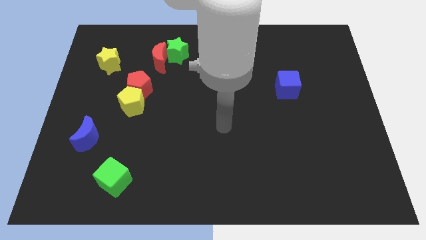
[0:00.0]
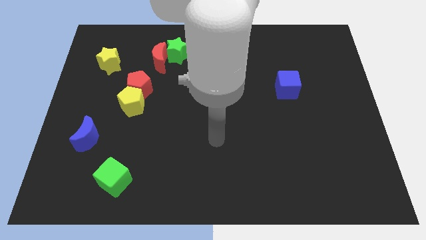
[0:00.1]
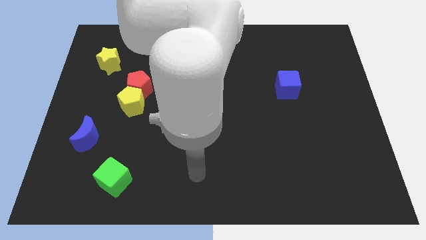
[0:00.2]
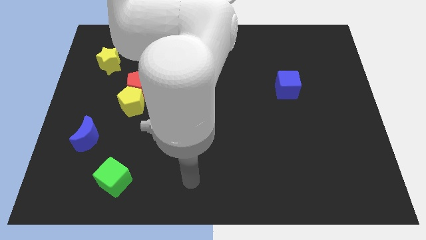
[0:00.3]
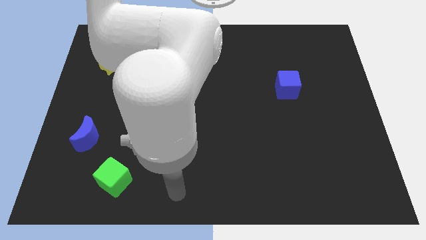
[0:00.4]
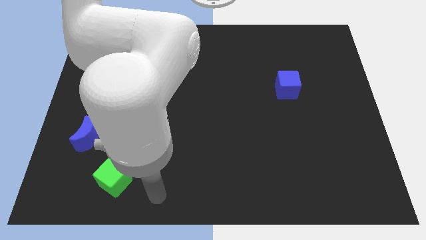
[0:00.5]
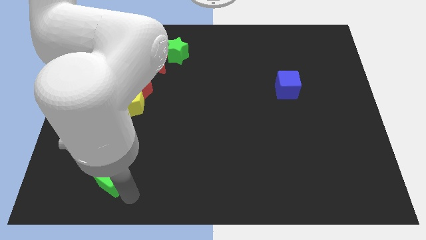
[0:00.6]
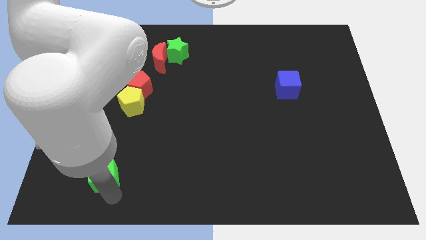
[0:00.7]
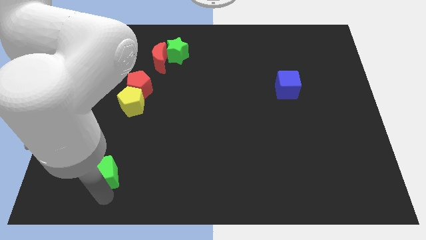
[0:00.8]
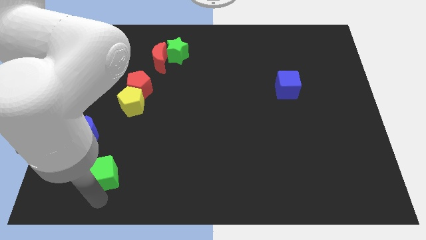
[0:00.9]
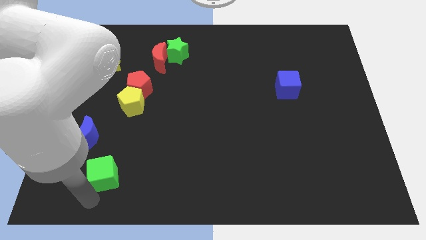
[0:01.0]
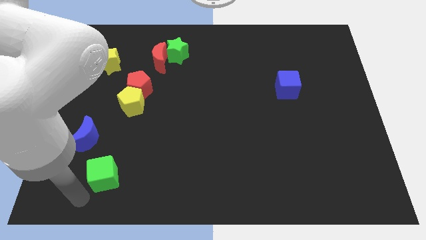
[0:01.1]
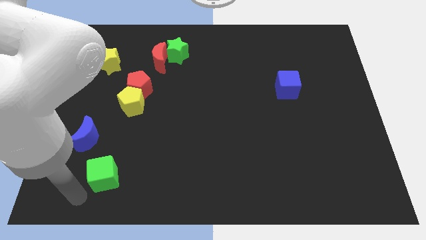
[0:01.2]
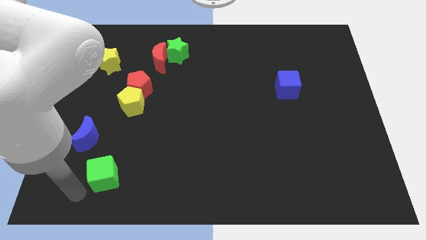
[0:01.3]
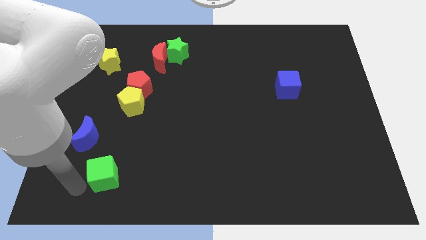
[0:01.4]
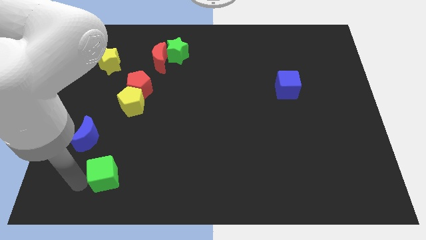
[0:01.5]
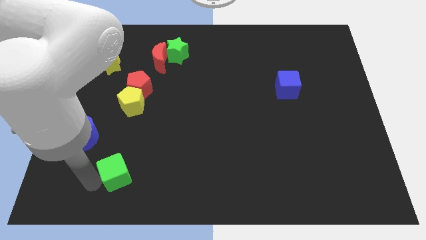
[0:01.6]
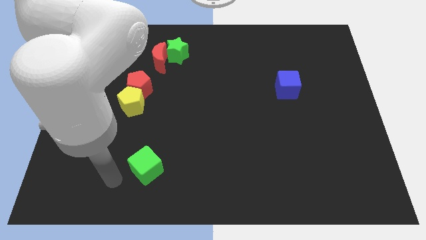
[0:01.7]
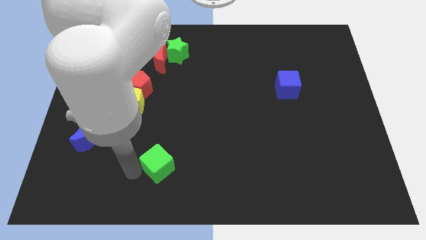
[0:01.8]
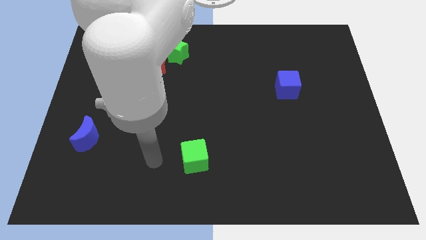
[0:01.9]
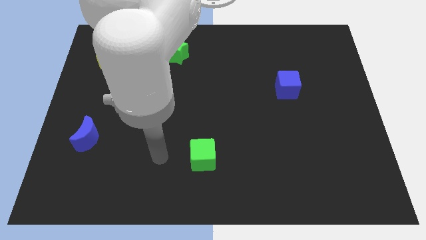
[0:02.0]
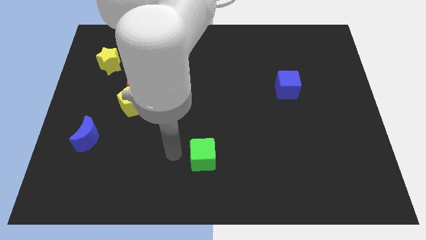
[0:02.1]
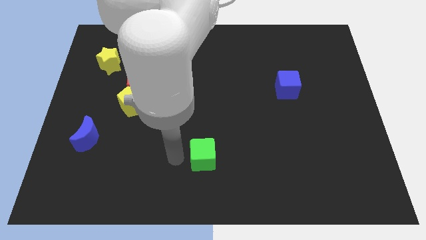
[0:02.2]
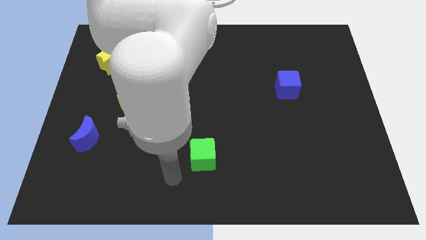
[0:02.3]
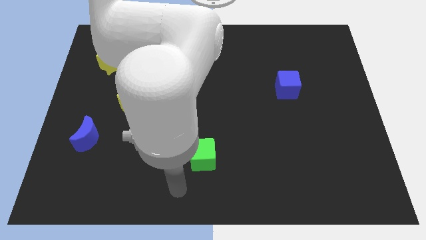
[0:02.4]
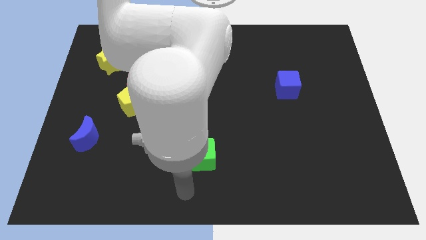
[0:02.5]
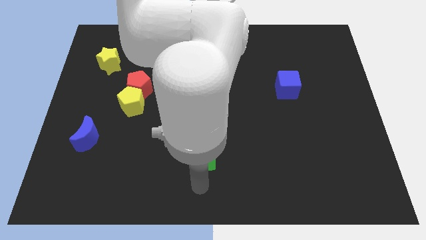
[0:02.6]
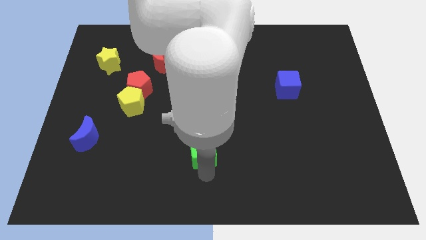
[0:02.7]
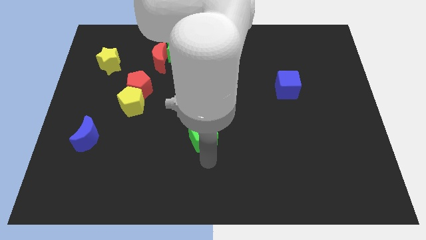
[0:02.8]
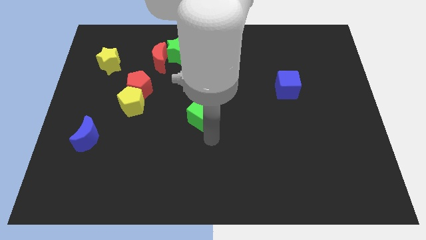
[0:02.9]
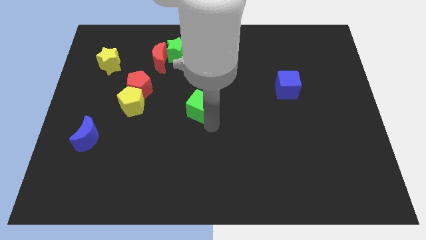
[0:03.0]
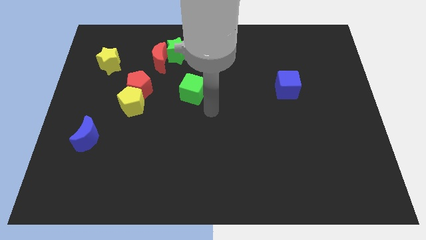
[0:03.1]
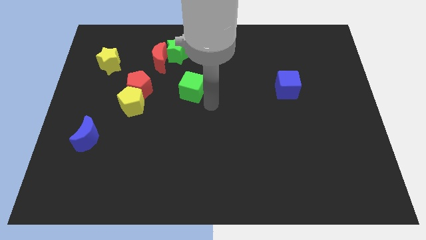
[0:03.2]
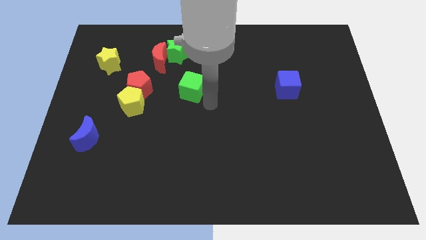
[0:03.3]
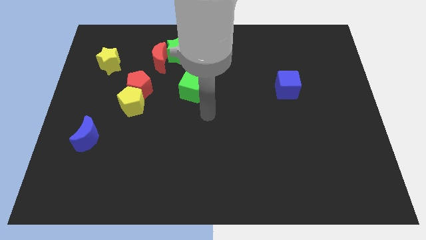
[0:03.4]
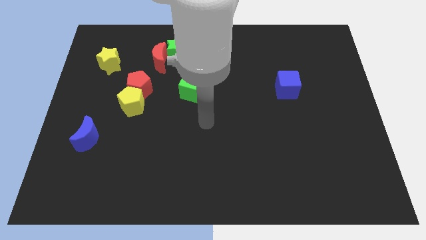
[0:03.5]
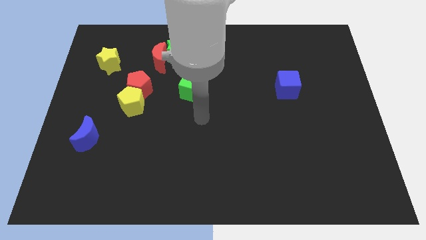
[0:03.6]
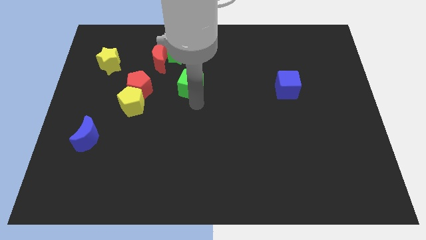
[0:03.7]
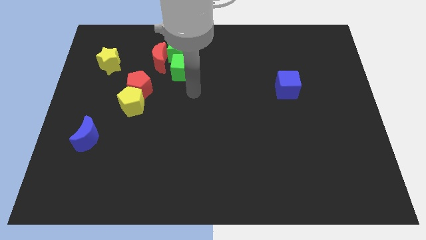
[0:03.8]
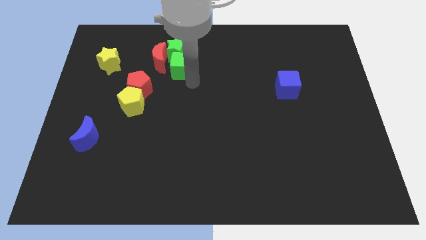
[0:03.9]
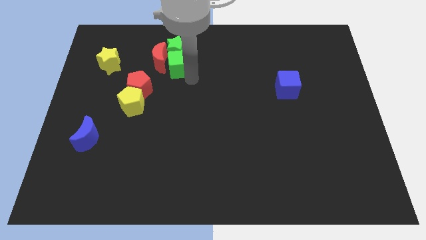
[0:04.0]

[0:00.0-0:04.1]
put the green cube towards the green star

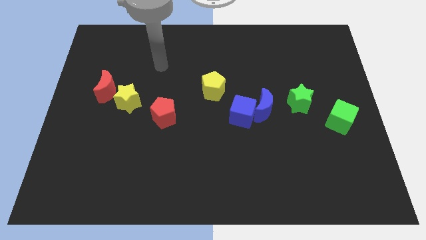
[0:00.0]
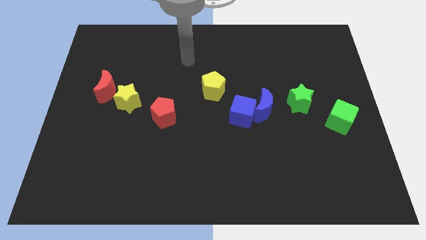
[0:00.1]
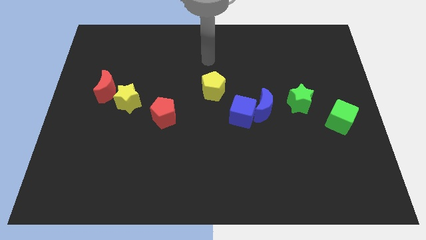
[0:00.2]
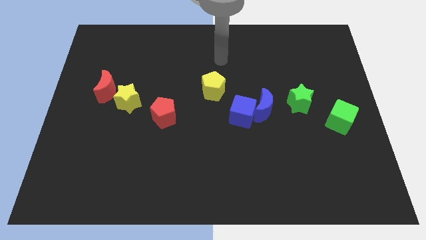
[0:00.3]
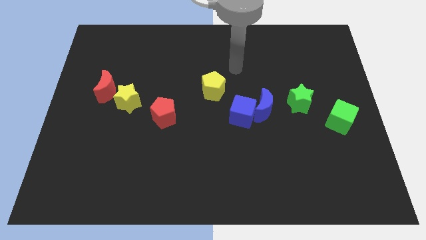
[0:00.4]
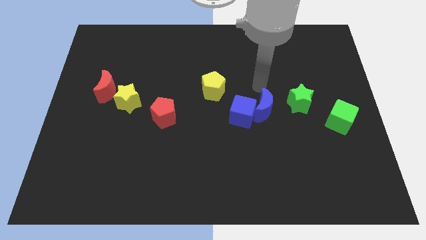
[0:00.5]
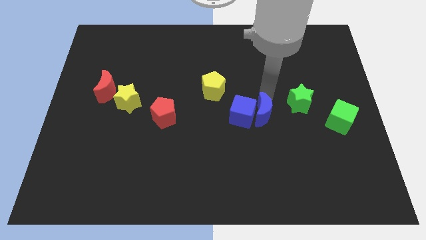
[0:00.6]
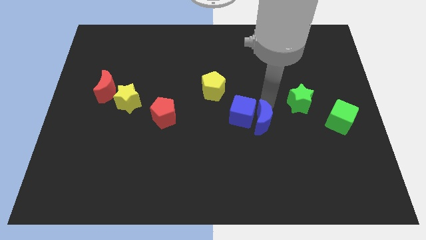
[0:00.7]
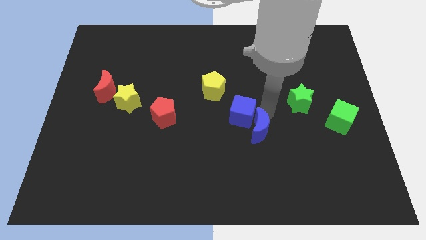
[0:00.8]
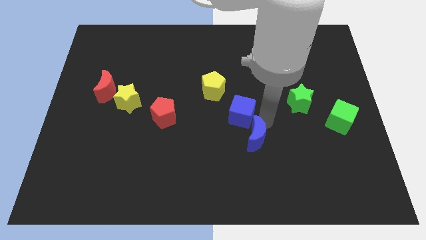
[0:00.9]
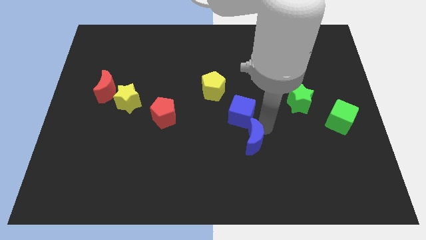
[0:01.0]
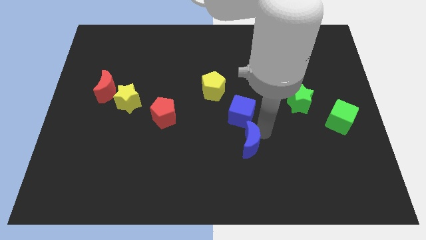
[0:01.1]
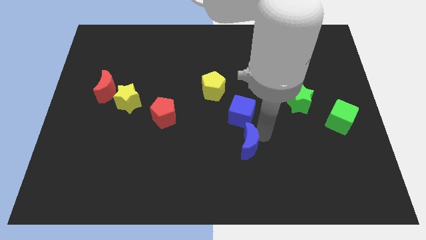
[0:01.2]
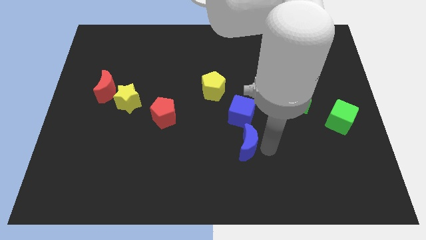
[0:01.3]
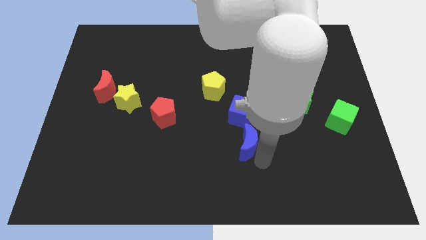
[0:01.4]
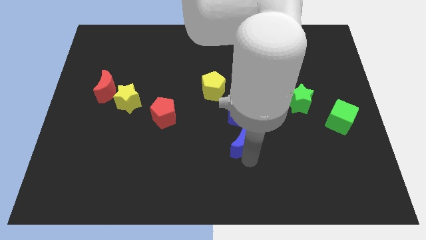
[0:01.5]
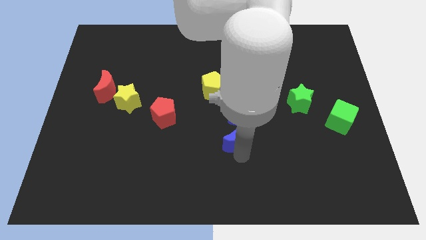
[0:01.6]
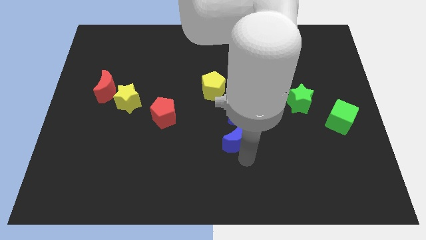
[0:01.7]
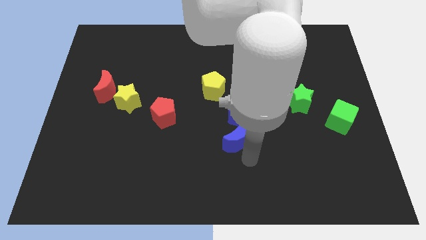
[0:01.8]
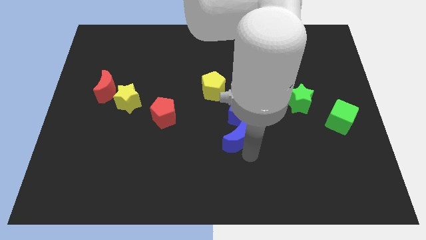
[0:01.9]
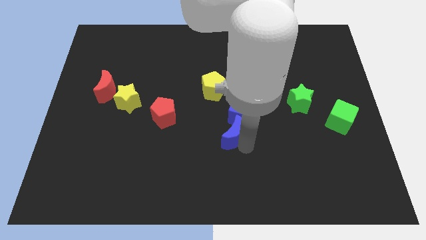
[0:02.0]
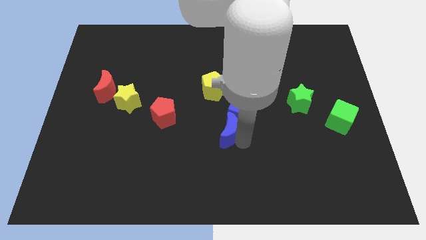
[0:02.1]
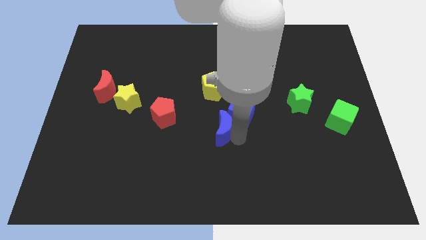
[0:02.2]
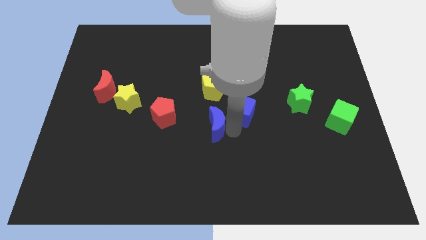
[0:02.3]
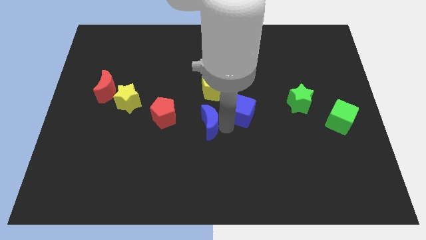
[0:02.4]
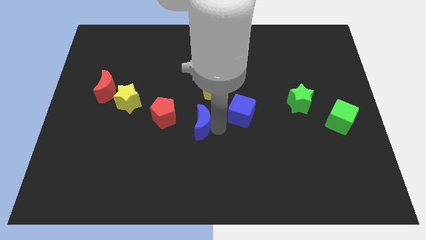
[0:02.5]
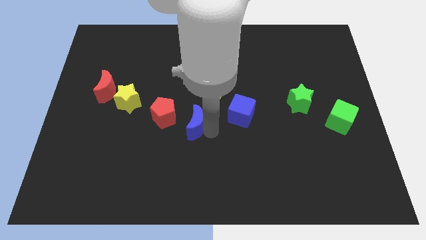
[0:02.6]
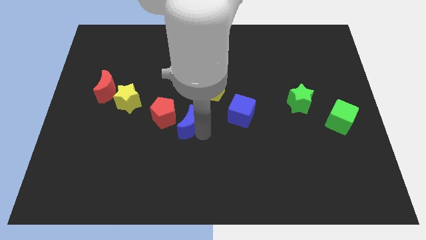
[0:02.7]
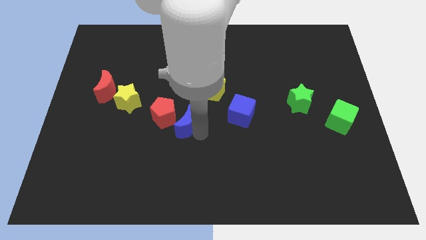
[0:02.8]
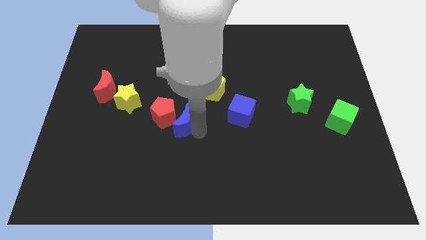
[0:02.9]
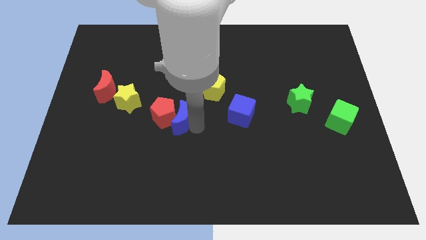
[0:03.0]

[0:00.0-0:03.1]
slide the blue moon close to the red pentagon

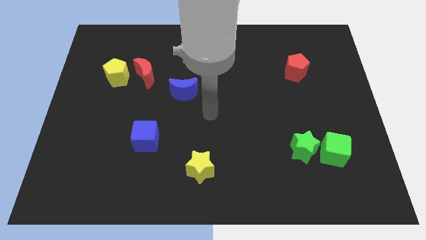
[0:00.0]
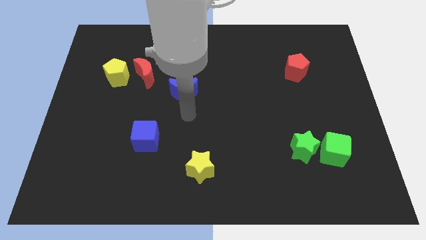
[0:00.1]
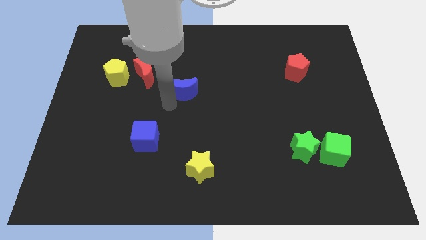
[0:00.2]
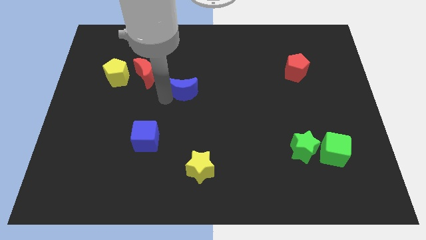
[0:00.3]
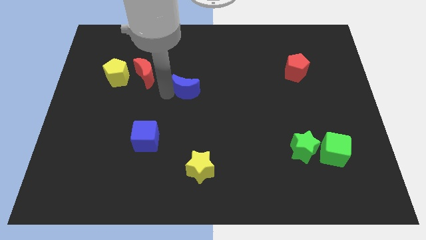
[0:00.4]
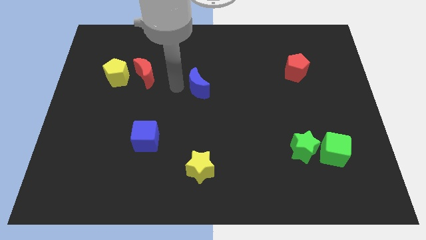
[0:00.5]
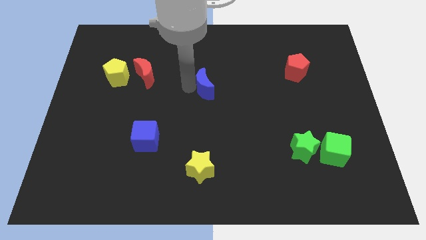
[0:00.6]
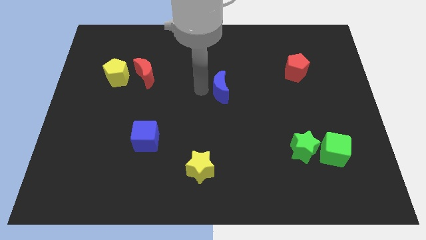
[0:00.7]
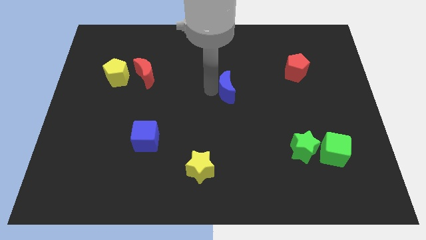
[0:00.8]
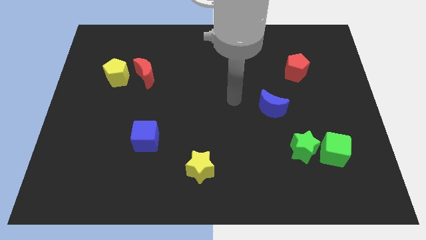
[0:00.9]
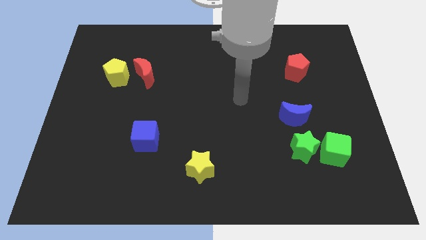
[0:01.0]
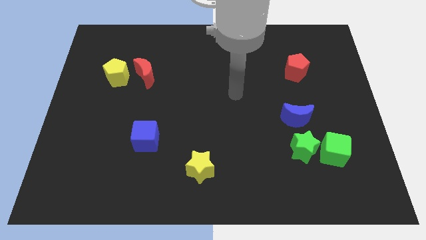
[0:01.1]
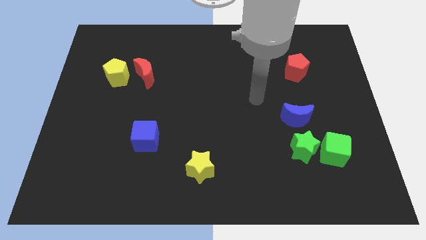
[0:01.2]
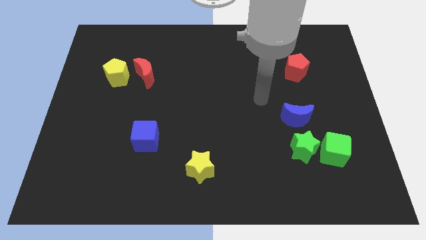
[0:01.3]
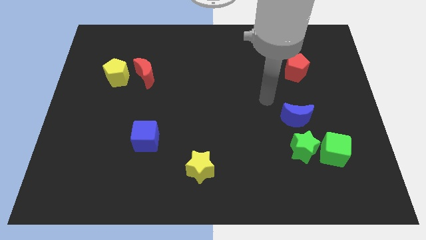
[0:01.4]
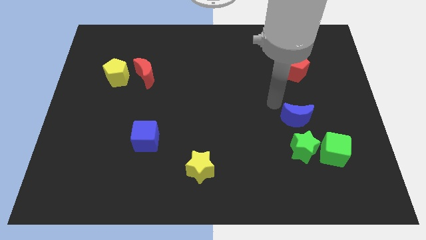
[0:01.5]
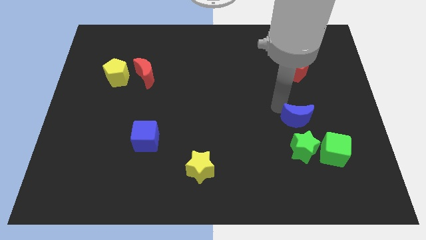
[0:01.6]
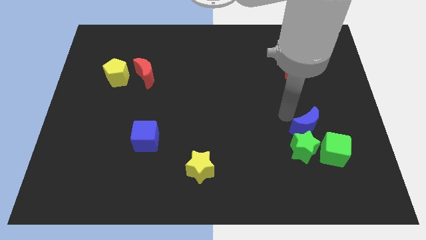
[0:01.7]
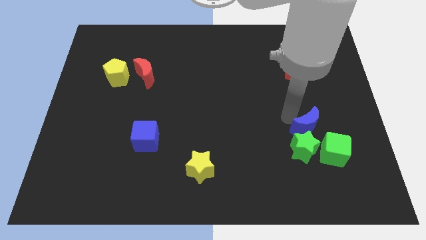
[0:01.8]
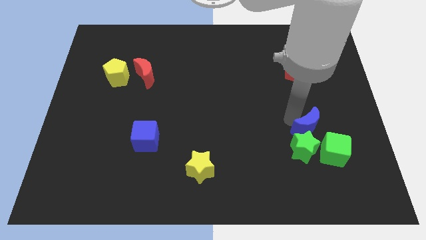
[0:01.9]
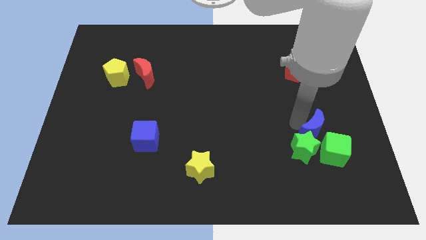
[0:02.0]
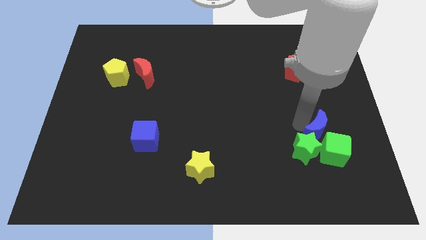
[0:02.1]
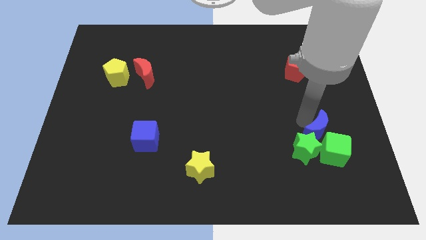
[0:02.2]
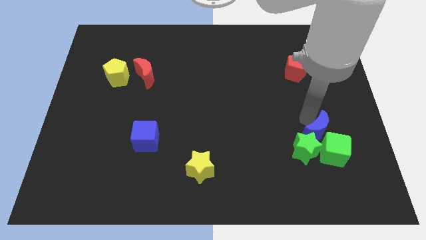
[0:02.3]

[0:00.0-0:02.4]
move the blue moon towards the green cube
